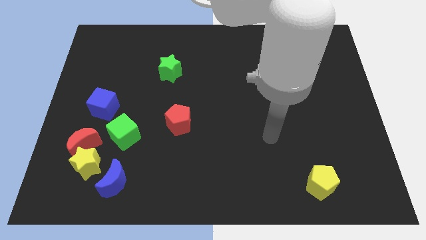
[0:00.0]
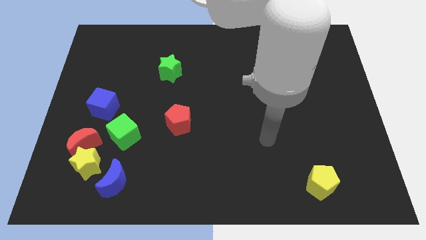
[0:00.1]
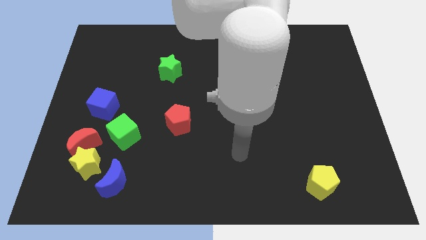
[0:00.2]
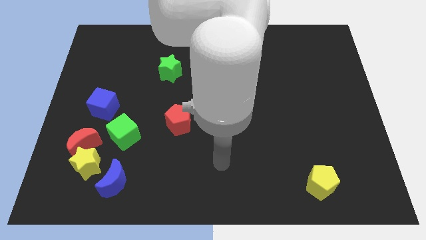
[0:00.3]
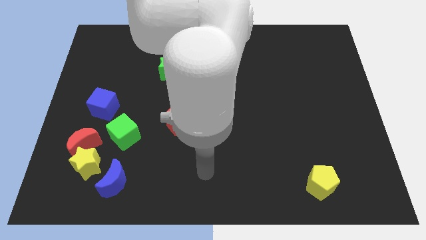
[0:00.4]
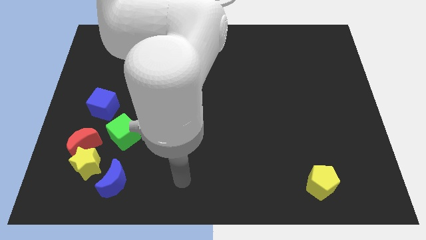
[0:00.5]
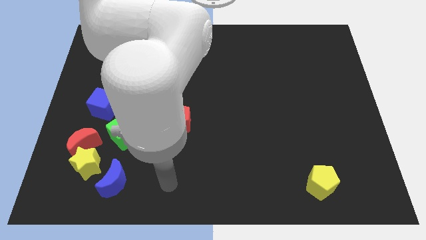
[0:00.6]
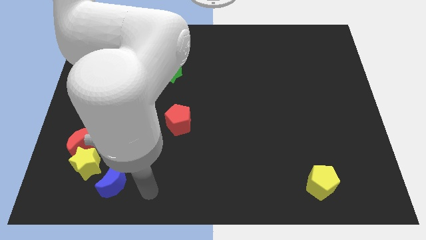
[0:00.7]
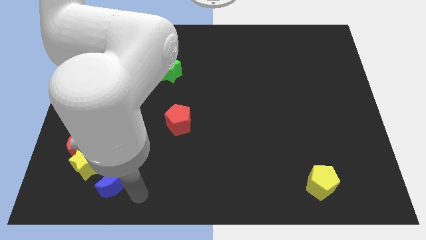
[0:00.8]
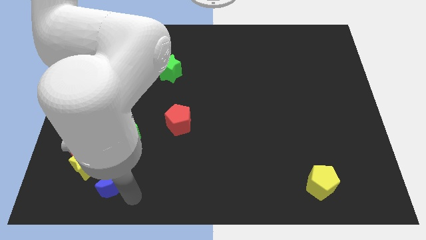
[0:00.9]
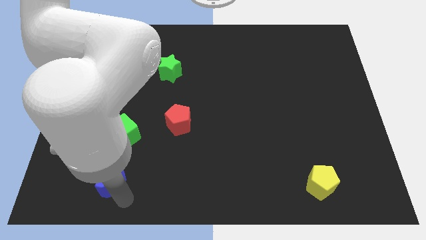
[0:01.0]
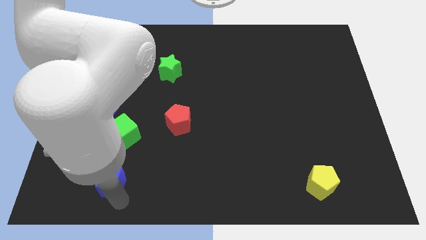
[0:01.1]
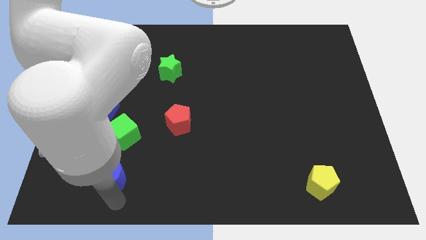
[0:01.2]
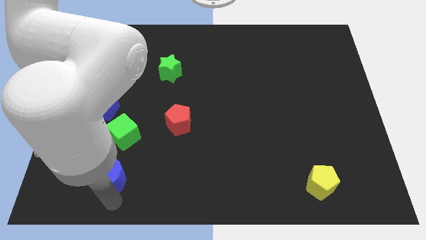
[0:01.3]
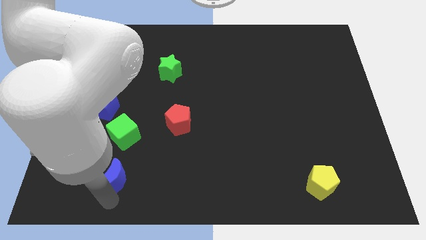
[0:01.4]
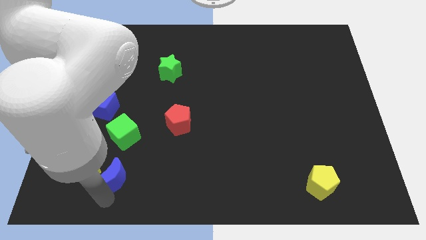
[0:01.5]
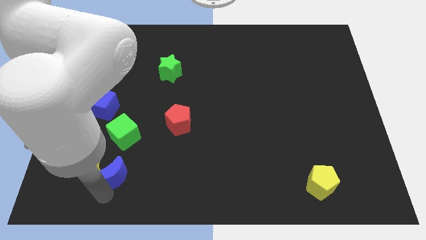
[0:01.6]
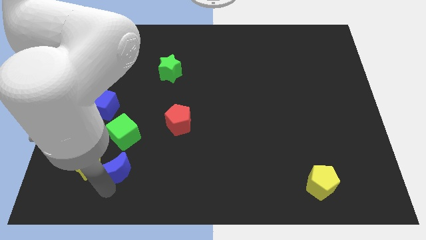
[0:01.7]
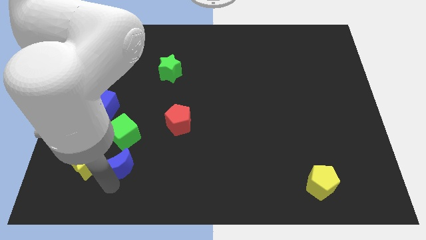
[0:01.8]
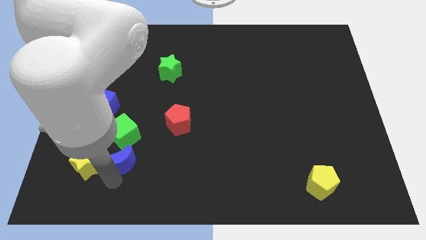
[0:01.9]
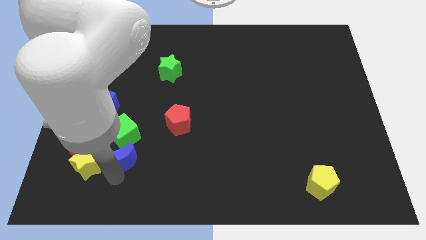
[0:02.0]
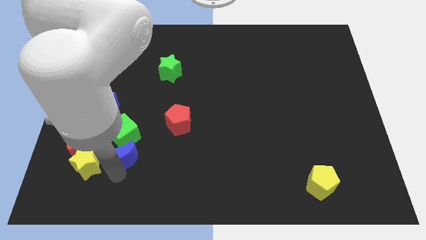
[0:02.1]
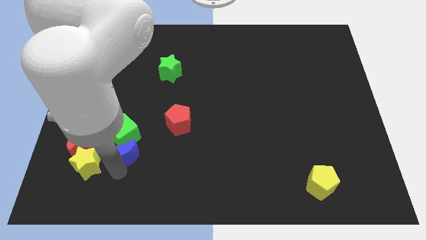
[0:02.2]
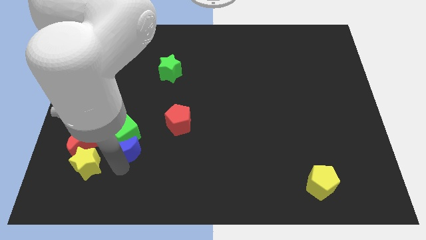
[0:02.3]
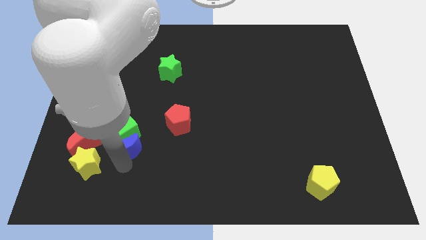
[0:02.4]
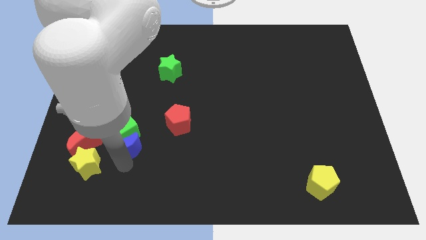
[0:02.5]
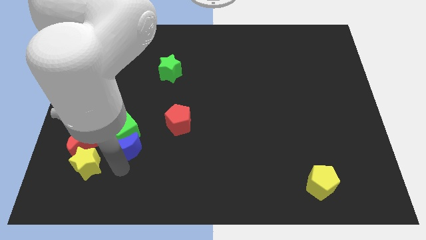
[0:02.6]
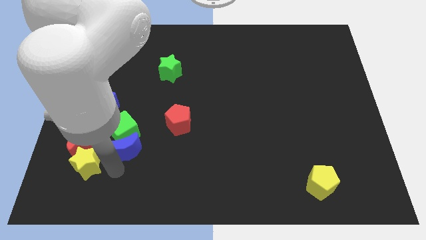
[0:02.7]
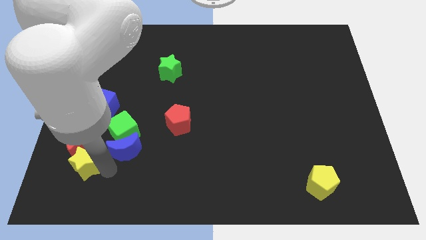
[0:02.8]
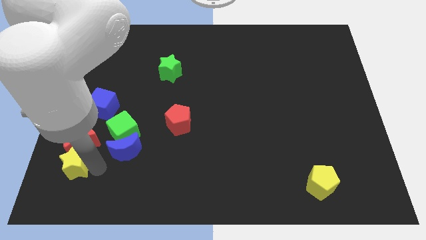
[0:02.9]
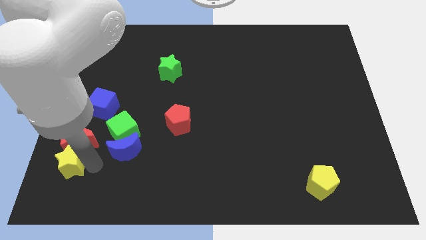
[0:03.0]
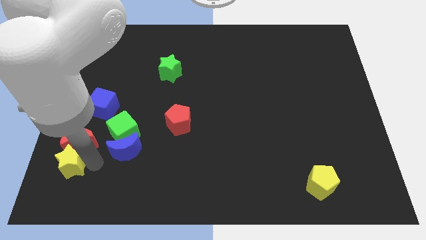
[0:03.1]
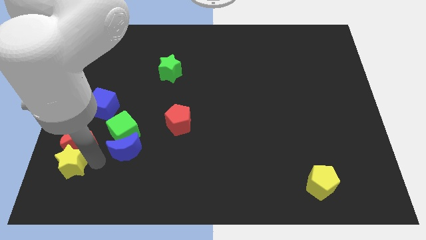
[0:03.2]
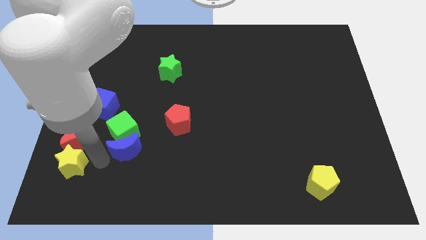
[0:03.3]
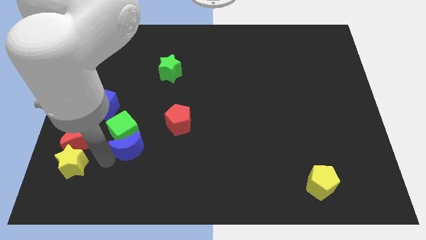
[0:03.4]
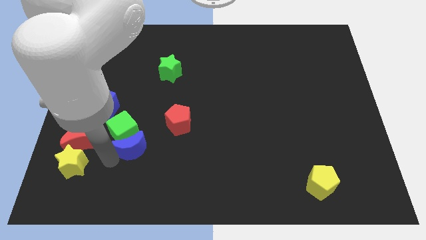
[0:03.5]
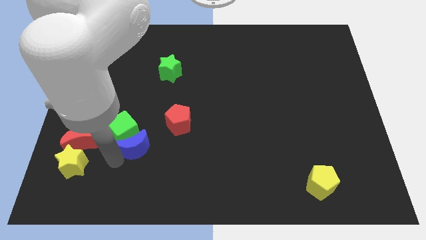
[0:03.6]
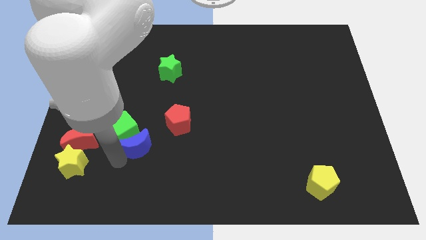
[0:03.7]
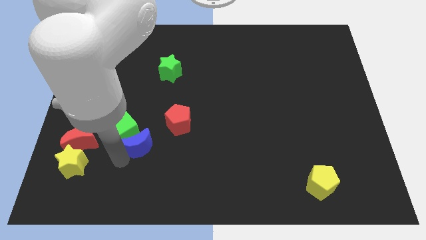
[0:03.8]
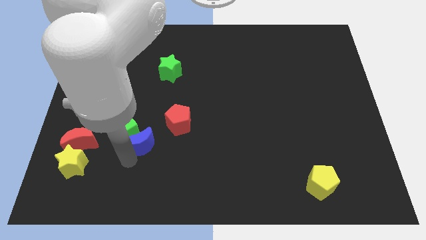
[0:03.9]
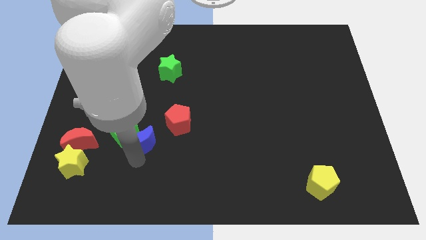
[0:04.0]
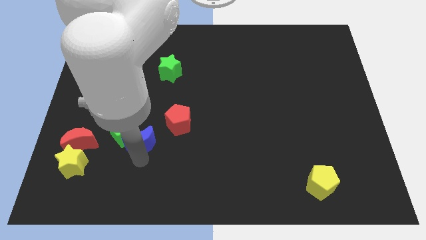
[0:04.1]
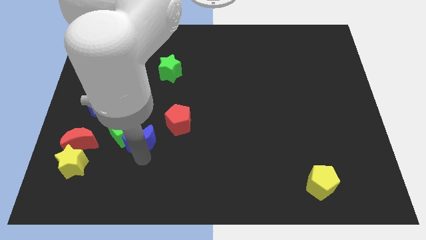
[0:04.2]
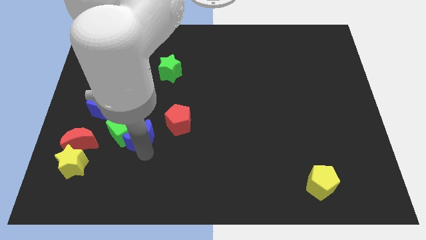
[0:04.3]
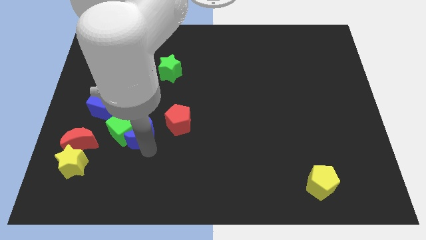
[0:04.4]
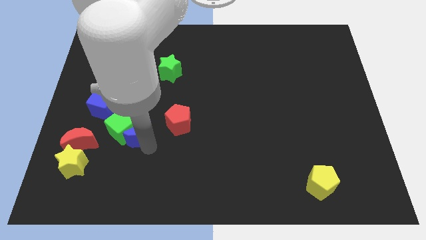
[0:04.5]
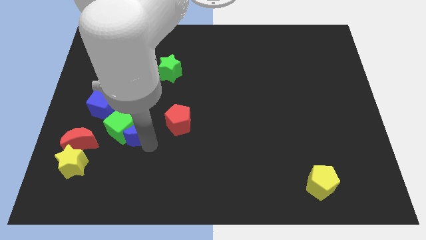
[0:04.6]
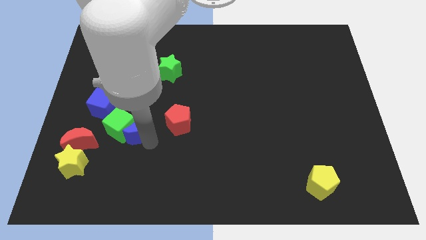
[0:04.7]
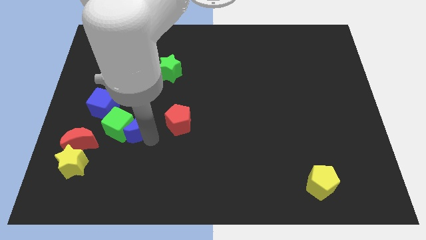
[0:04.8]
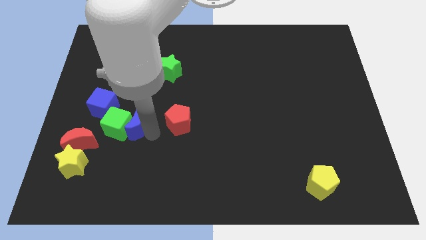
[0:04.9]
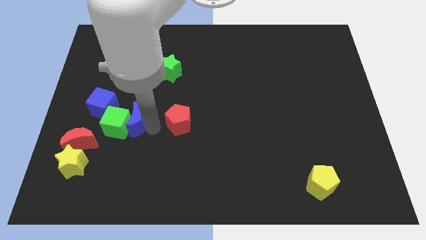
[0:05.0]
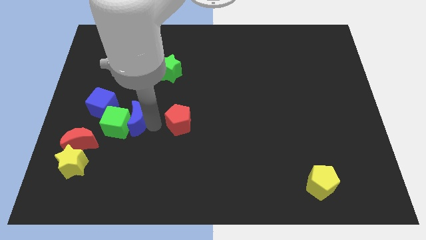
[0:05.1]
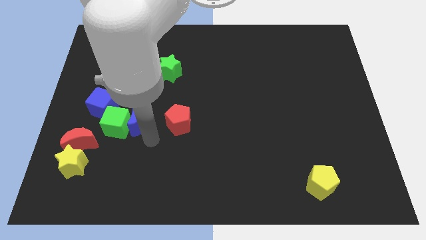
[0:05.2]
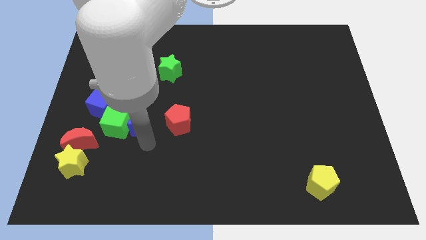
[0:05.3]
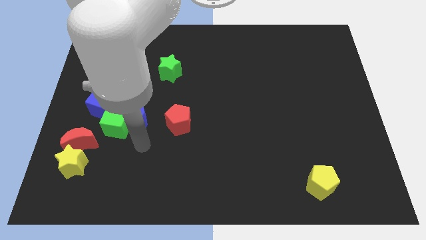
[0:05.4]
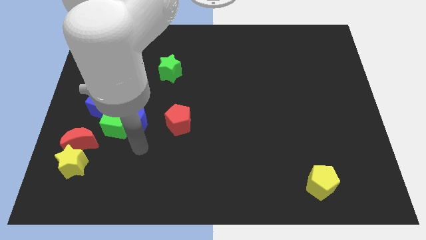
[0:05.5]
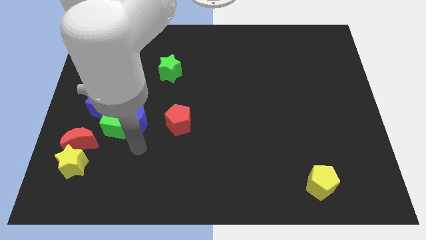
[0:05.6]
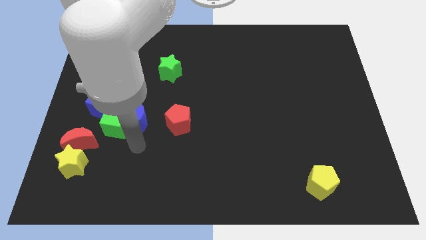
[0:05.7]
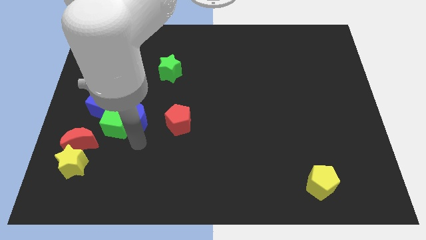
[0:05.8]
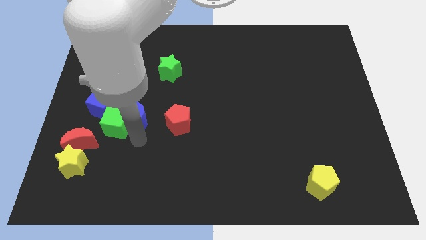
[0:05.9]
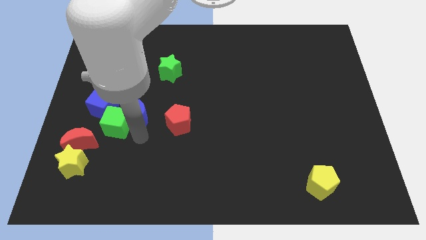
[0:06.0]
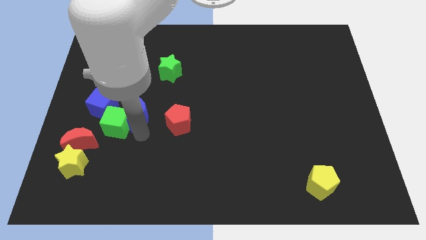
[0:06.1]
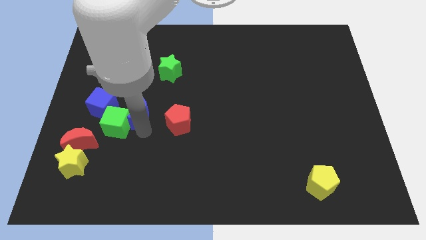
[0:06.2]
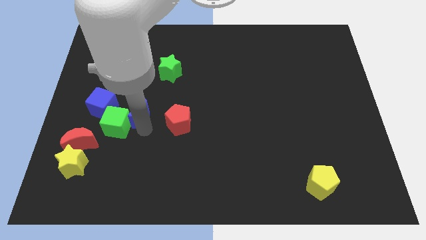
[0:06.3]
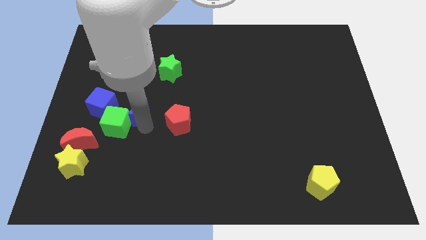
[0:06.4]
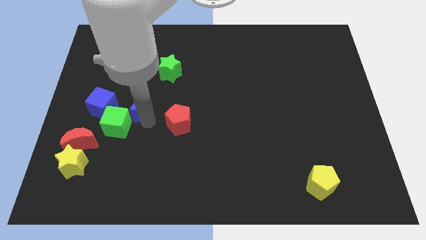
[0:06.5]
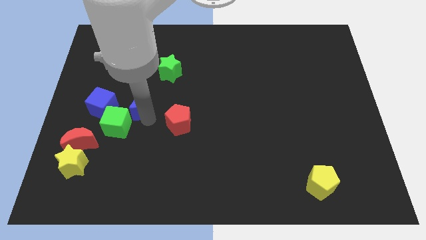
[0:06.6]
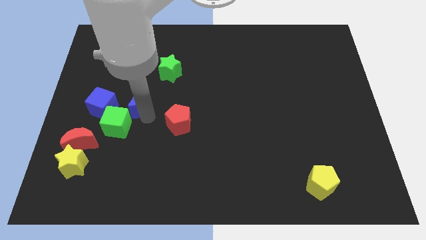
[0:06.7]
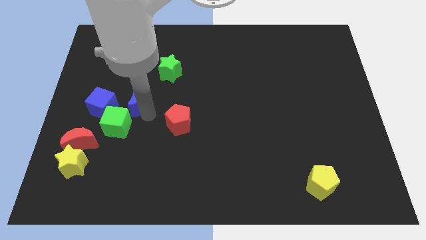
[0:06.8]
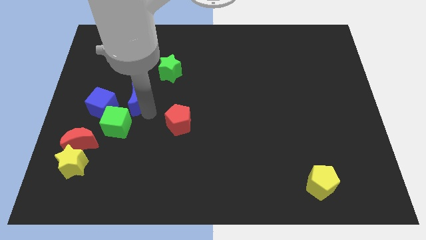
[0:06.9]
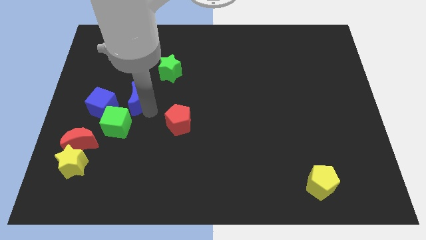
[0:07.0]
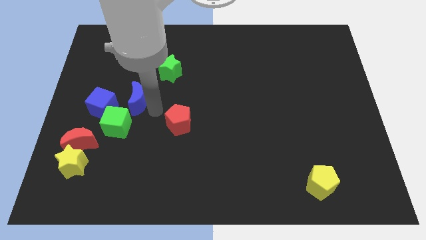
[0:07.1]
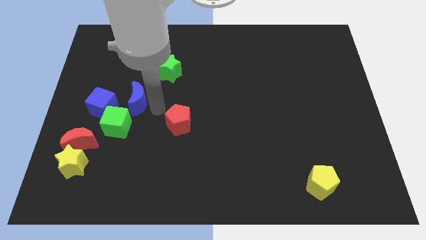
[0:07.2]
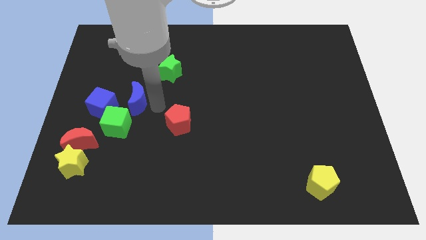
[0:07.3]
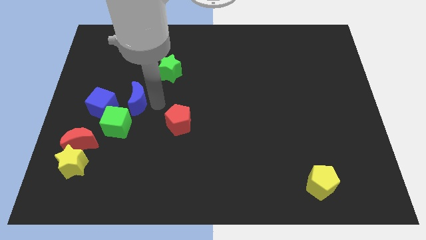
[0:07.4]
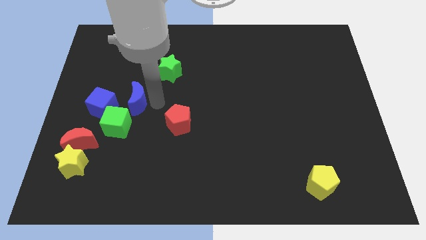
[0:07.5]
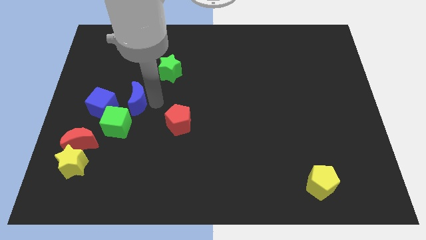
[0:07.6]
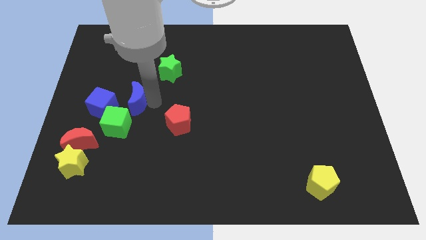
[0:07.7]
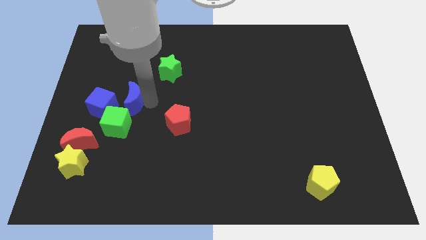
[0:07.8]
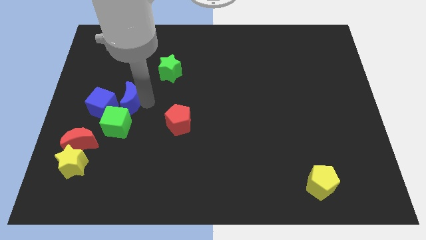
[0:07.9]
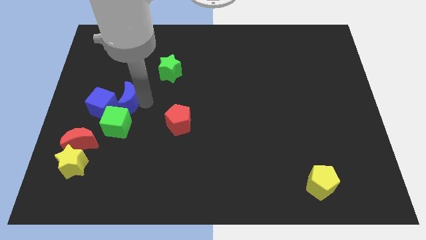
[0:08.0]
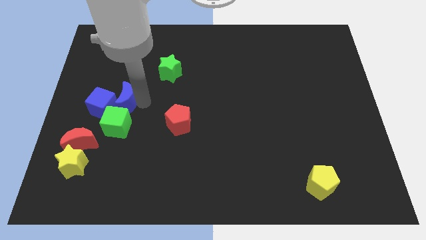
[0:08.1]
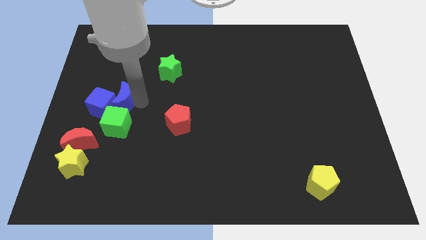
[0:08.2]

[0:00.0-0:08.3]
move the blue moon towards the blue cube
